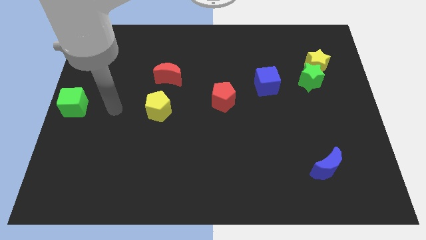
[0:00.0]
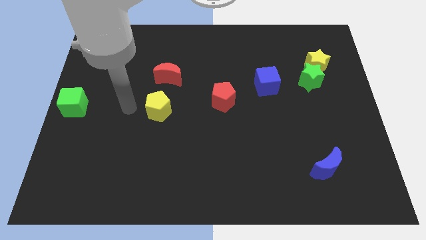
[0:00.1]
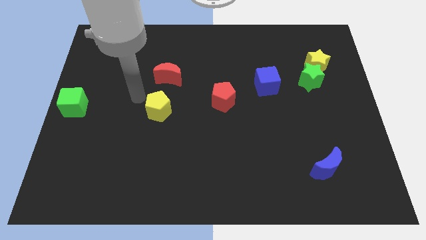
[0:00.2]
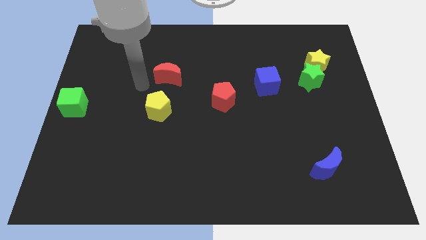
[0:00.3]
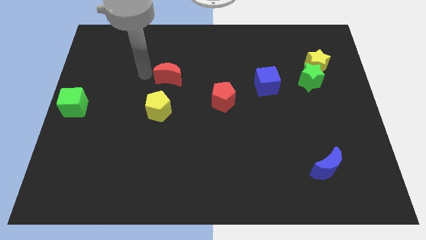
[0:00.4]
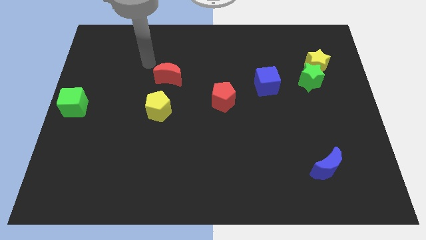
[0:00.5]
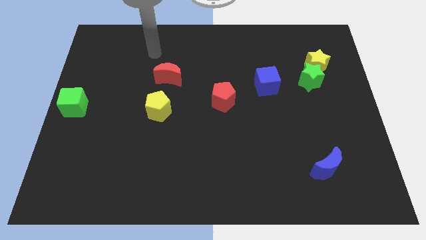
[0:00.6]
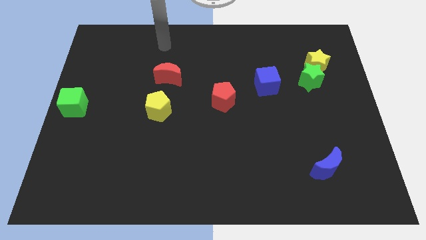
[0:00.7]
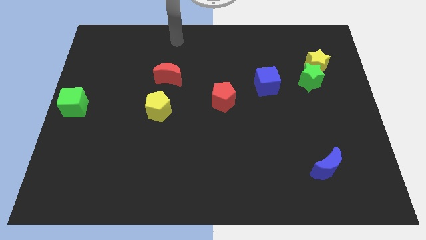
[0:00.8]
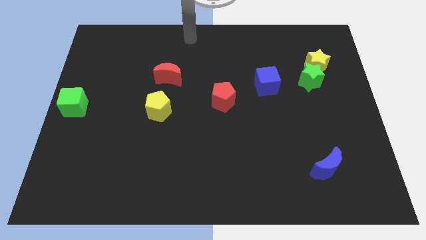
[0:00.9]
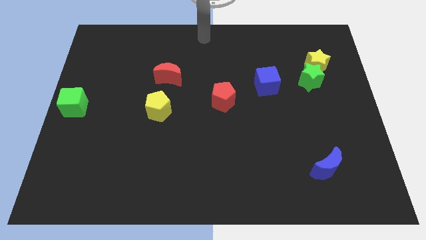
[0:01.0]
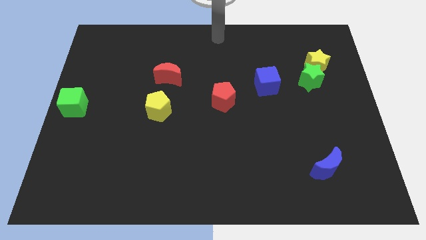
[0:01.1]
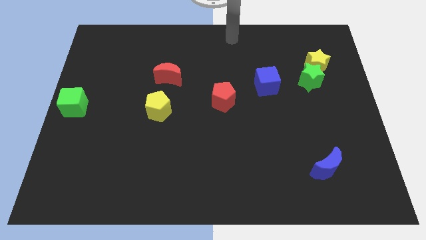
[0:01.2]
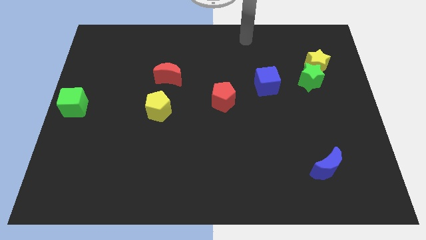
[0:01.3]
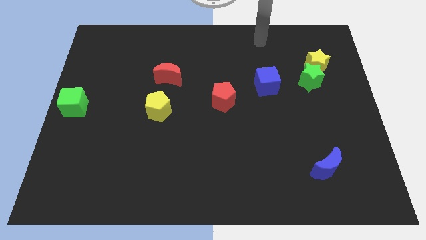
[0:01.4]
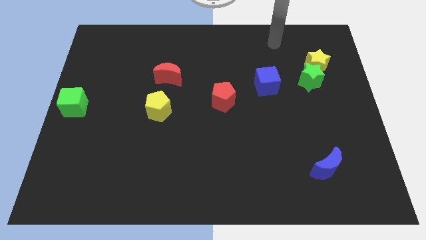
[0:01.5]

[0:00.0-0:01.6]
put your hand above the blue cube

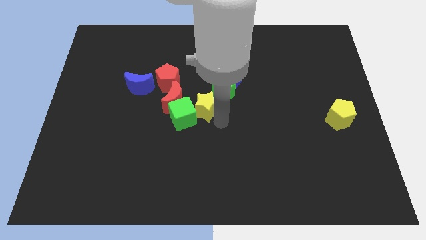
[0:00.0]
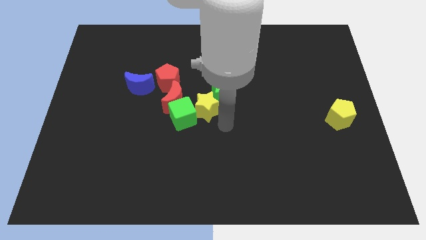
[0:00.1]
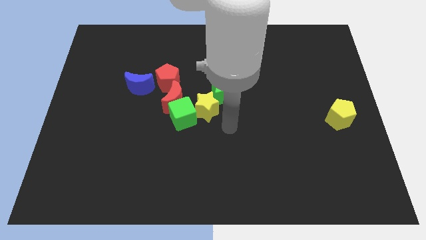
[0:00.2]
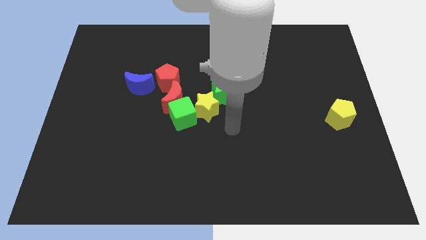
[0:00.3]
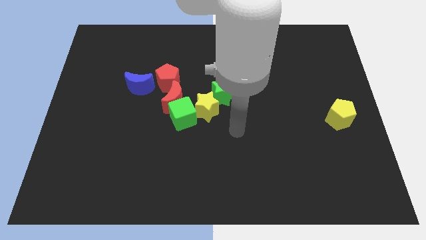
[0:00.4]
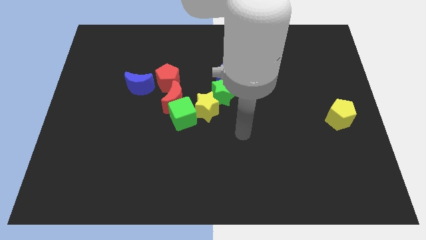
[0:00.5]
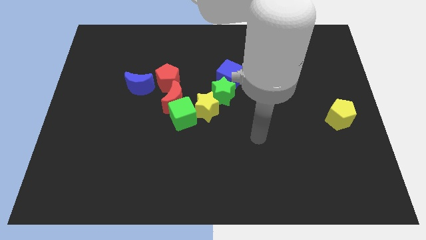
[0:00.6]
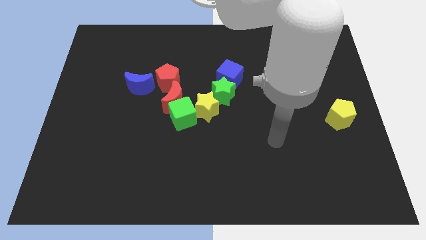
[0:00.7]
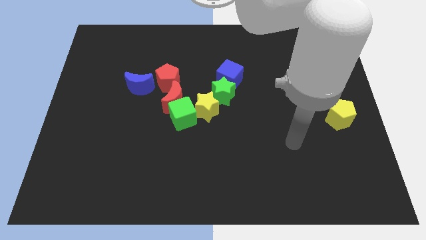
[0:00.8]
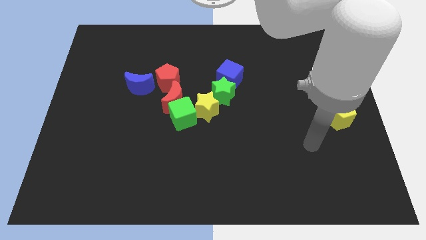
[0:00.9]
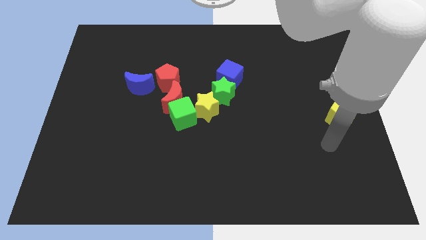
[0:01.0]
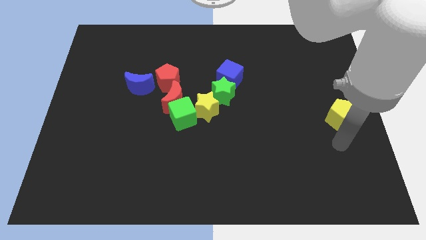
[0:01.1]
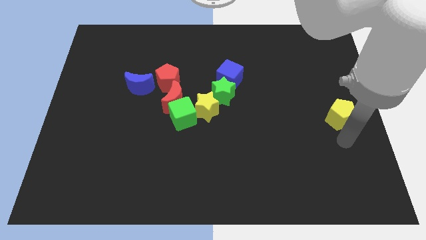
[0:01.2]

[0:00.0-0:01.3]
move your arm towards the yellow pentagon

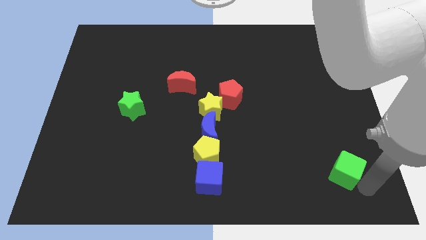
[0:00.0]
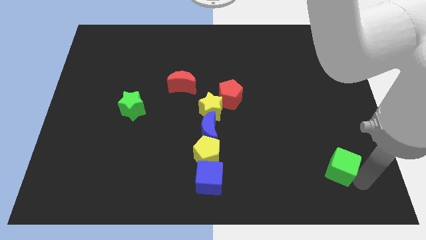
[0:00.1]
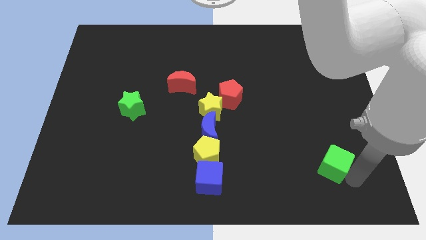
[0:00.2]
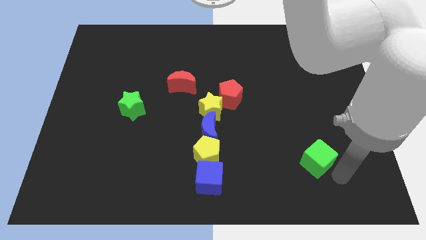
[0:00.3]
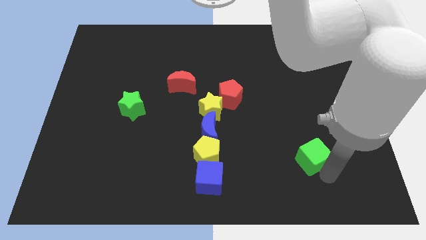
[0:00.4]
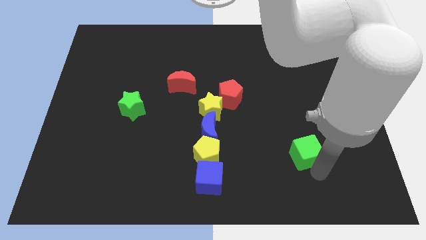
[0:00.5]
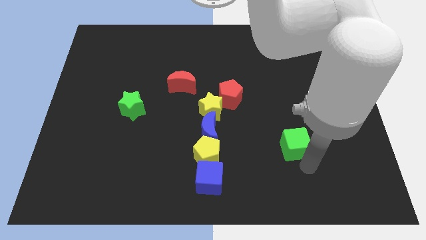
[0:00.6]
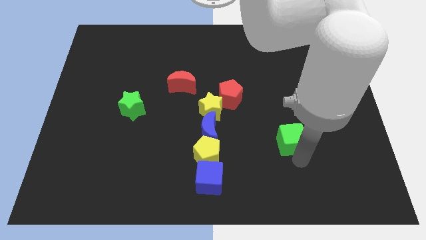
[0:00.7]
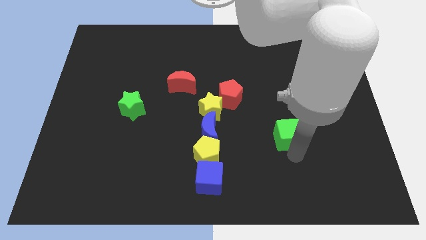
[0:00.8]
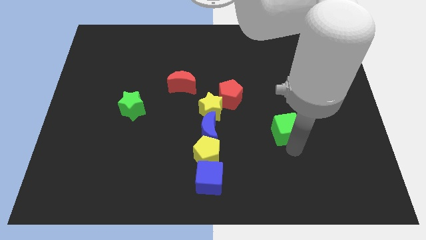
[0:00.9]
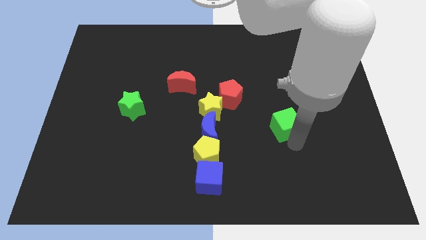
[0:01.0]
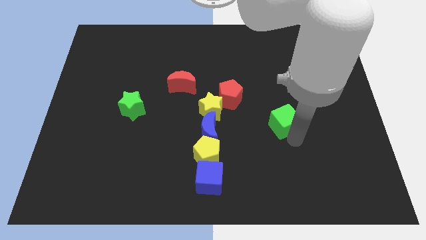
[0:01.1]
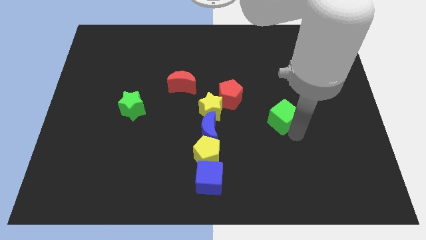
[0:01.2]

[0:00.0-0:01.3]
drag the green cube towards the top

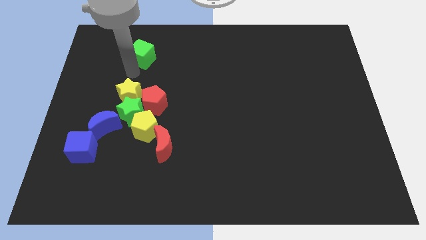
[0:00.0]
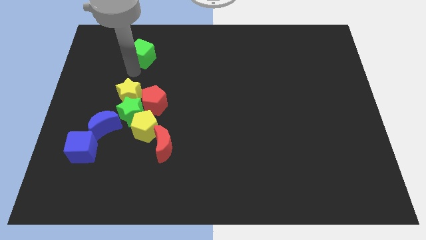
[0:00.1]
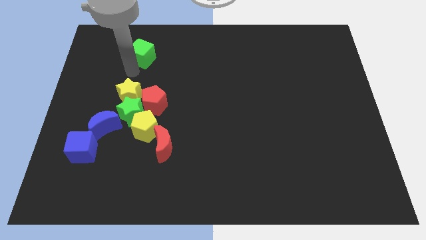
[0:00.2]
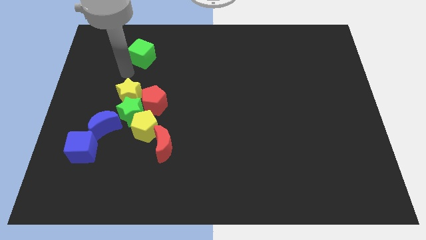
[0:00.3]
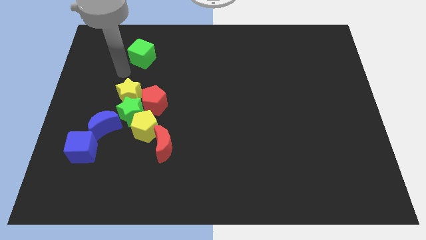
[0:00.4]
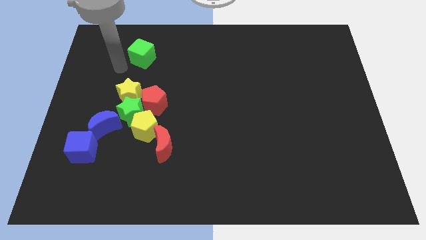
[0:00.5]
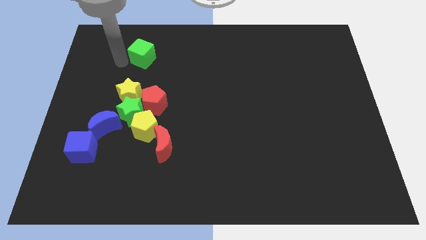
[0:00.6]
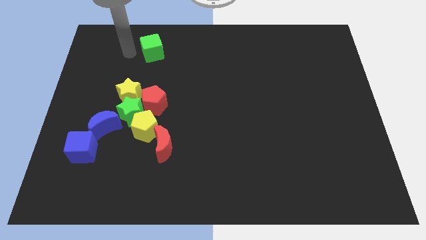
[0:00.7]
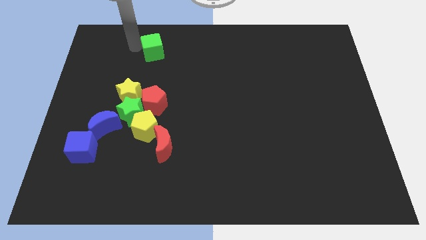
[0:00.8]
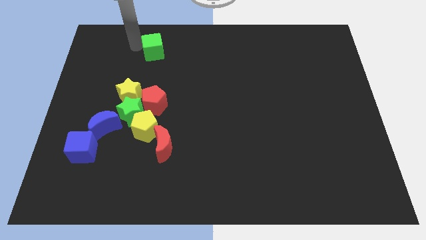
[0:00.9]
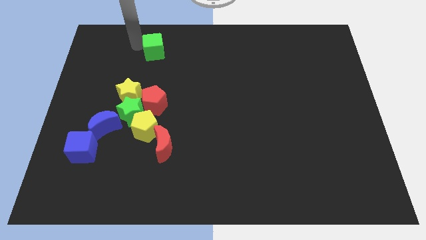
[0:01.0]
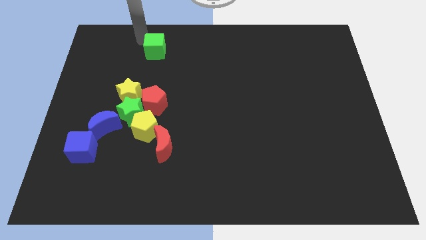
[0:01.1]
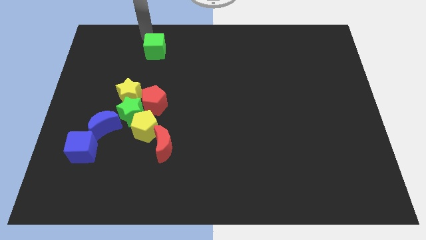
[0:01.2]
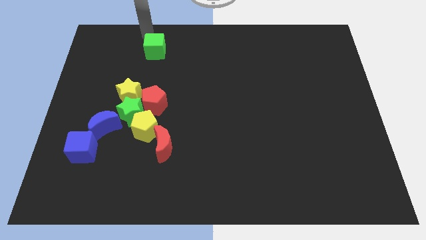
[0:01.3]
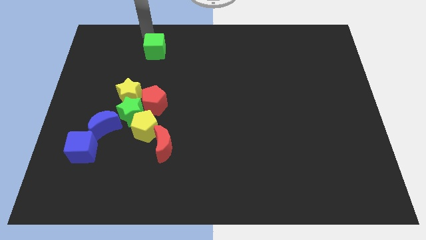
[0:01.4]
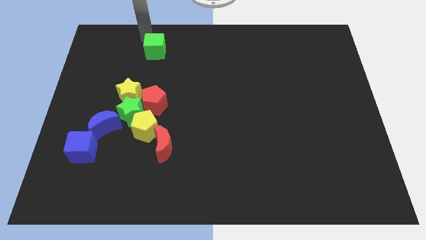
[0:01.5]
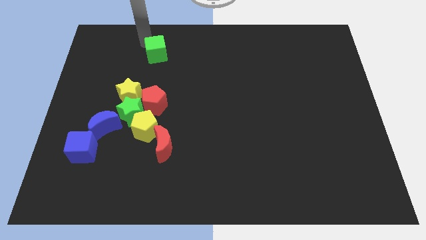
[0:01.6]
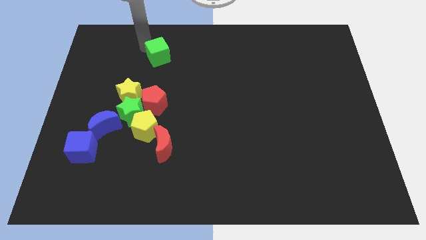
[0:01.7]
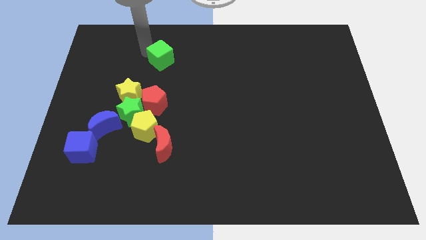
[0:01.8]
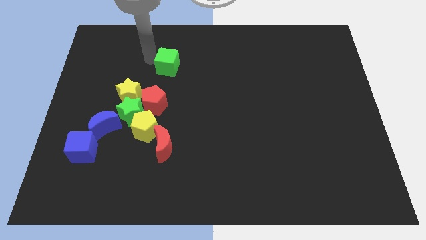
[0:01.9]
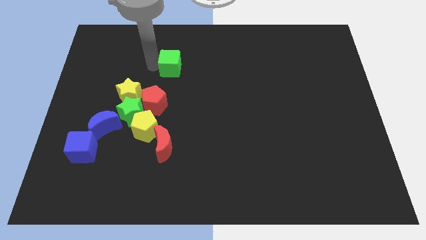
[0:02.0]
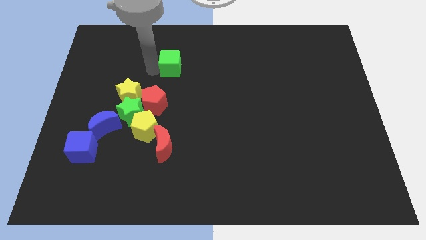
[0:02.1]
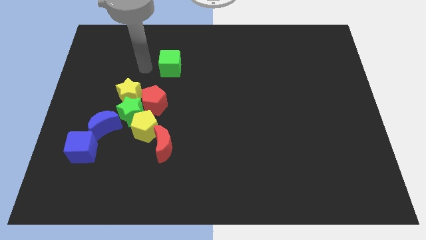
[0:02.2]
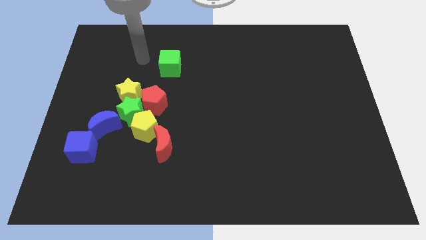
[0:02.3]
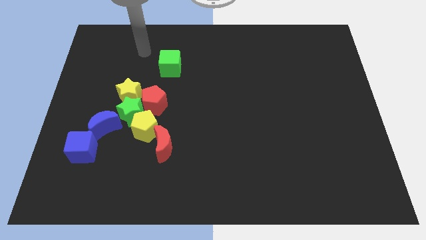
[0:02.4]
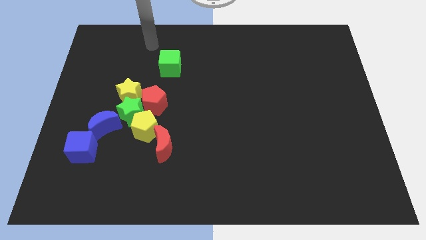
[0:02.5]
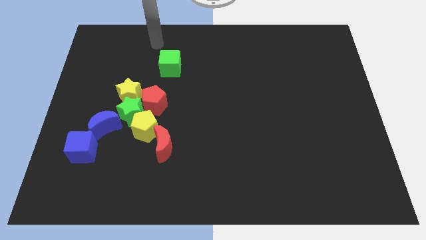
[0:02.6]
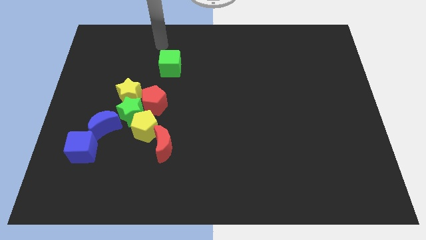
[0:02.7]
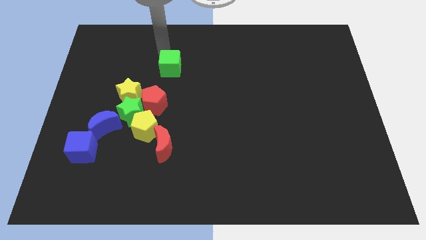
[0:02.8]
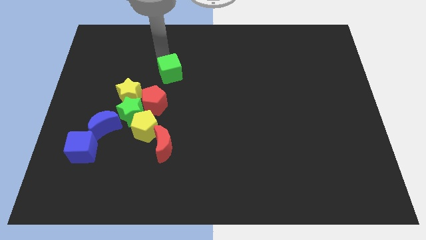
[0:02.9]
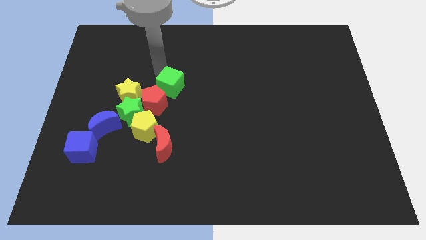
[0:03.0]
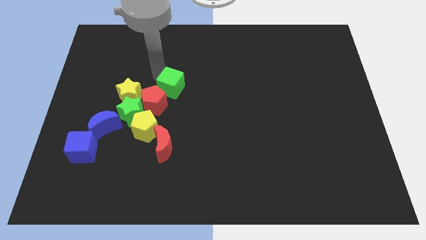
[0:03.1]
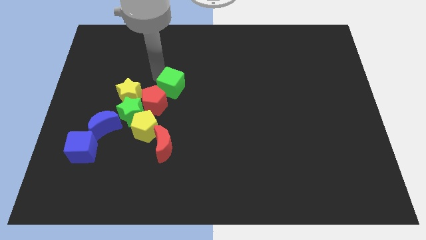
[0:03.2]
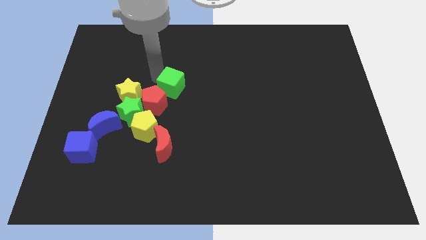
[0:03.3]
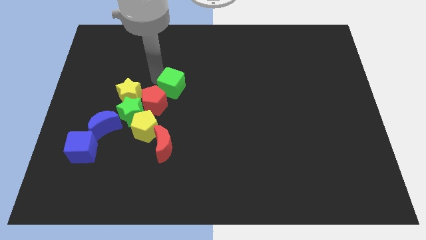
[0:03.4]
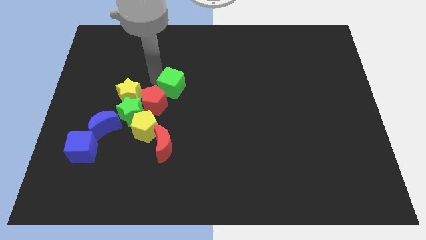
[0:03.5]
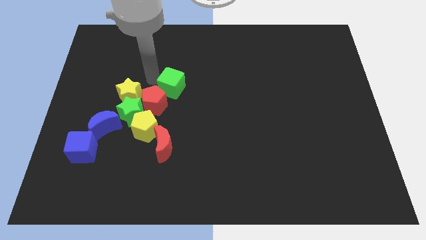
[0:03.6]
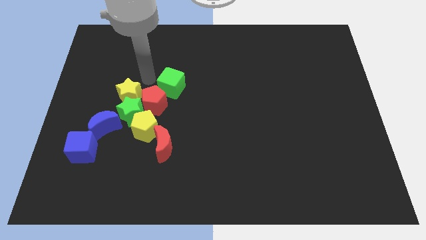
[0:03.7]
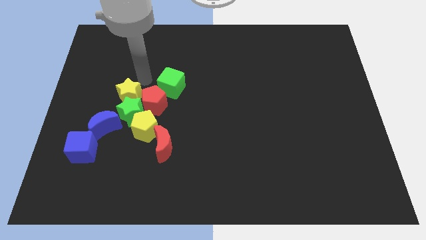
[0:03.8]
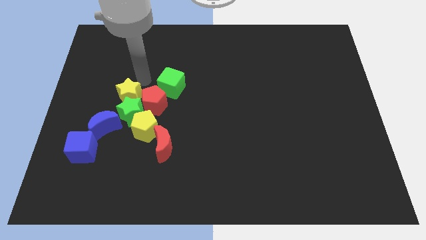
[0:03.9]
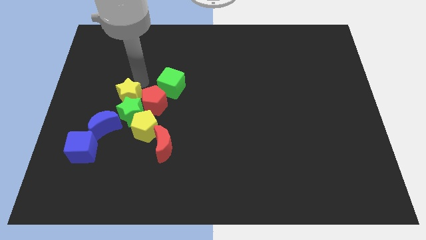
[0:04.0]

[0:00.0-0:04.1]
move the green cube to the top right of the red pentagon

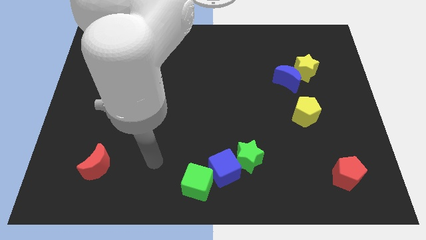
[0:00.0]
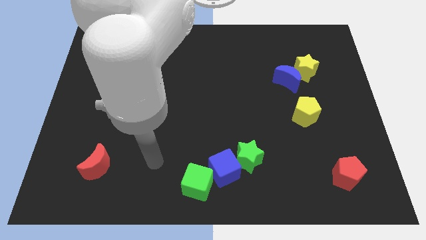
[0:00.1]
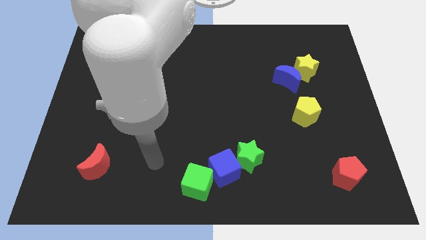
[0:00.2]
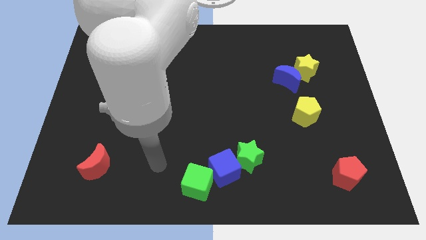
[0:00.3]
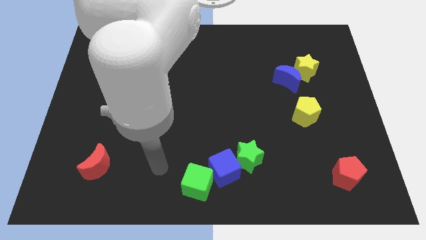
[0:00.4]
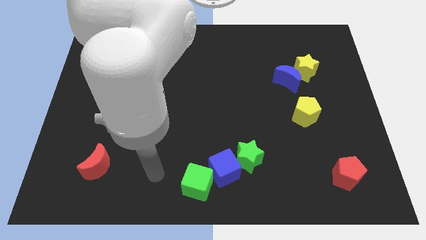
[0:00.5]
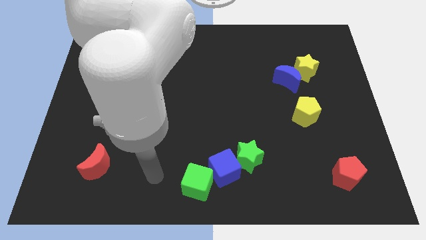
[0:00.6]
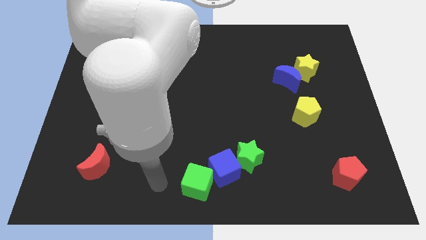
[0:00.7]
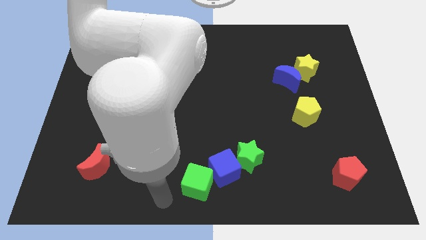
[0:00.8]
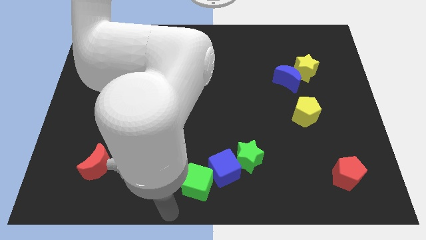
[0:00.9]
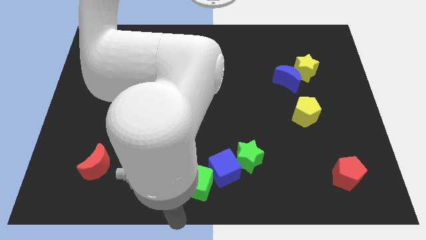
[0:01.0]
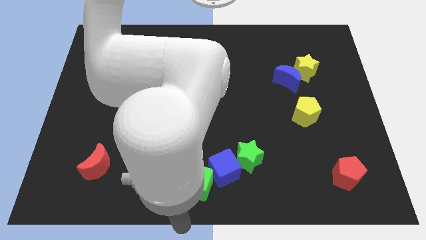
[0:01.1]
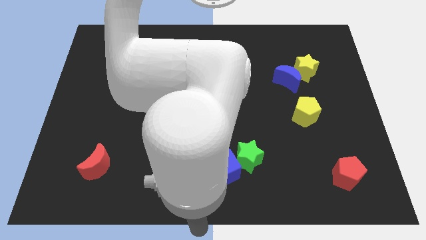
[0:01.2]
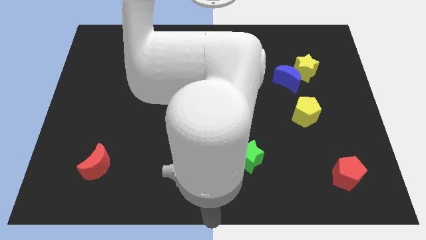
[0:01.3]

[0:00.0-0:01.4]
move your arm to the bottom center of the board
